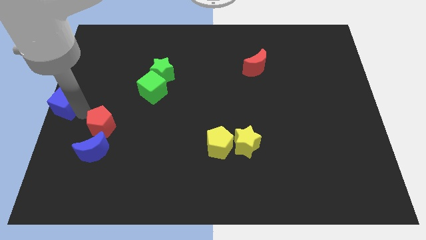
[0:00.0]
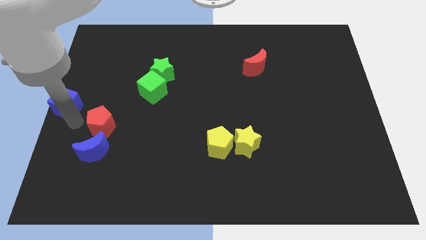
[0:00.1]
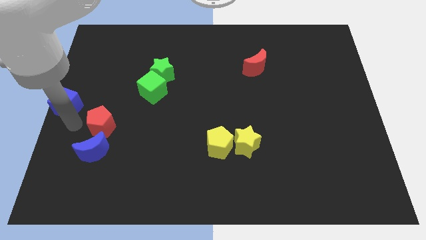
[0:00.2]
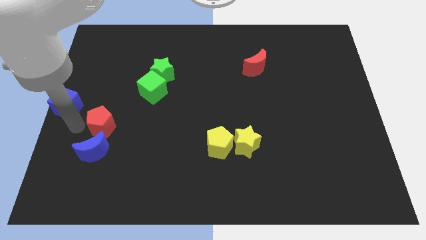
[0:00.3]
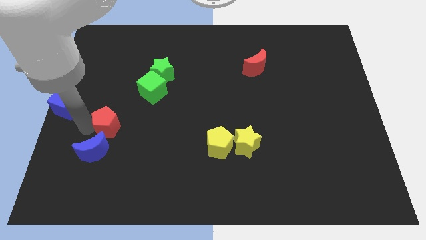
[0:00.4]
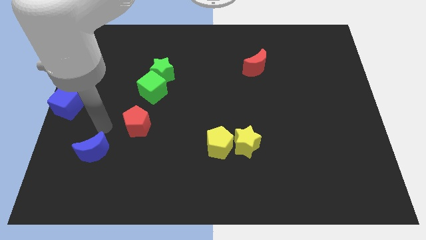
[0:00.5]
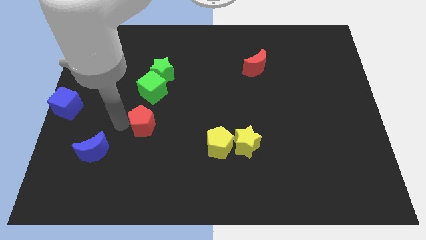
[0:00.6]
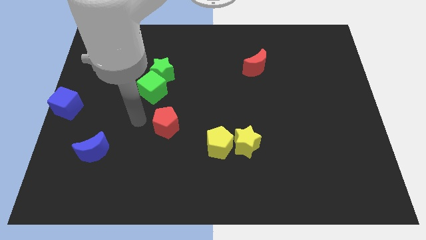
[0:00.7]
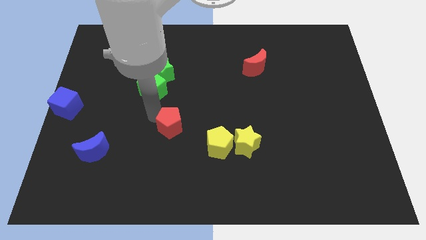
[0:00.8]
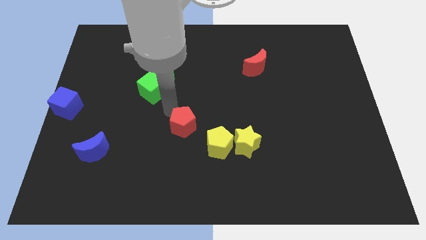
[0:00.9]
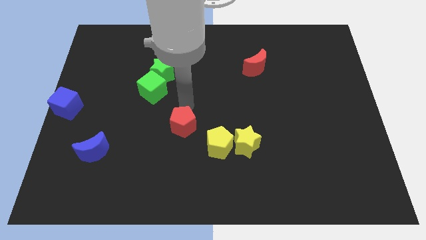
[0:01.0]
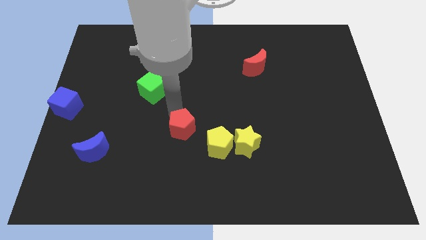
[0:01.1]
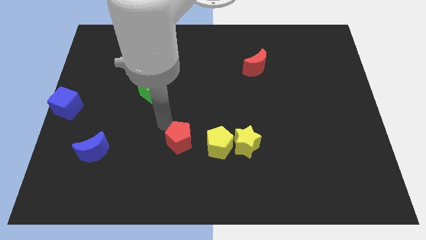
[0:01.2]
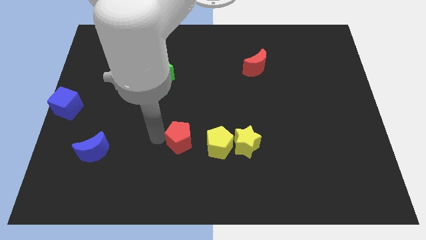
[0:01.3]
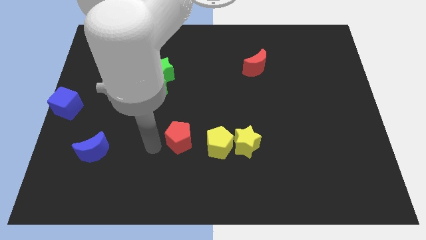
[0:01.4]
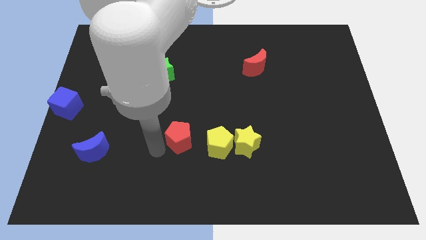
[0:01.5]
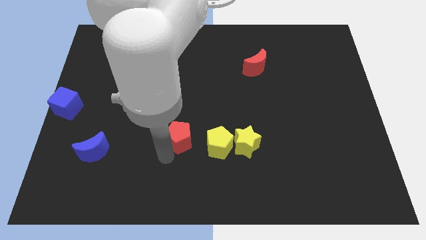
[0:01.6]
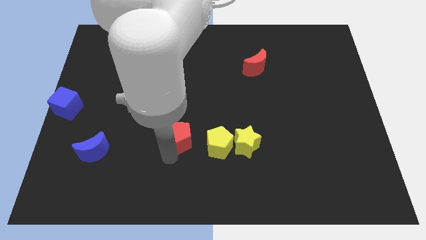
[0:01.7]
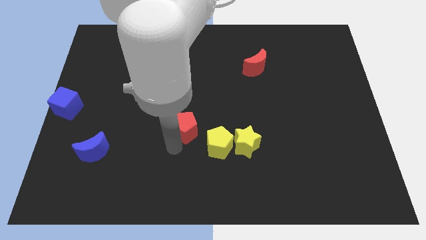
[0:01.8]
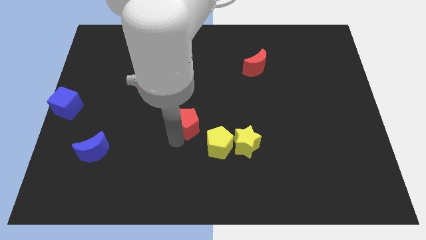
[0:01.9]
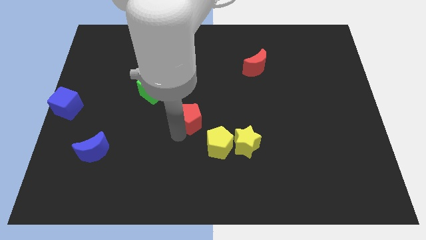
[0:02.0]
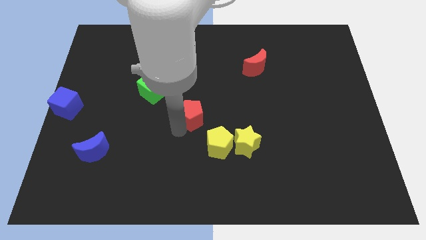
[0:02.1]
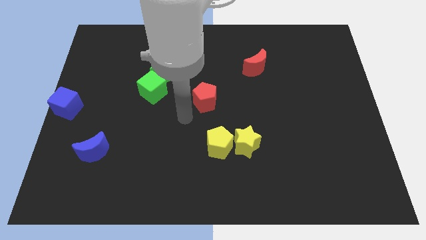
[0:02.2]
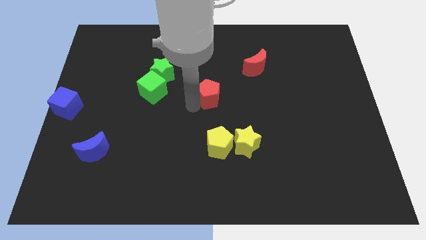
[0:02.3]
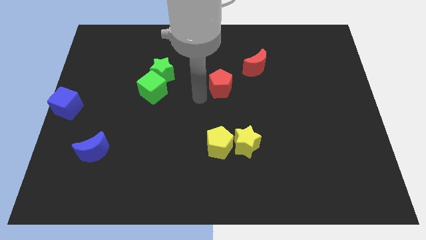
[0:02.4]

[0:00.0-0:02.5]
place the red pentagon to the right of the green cube

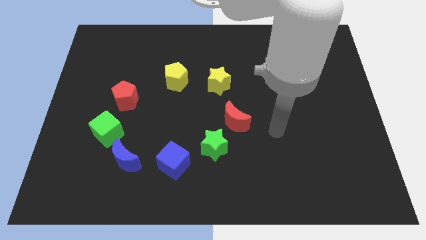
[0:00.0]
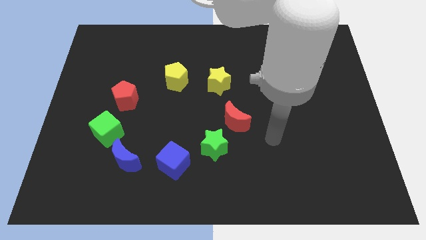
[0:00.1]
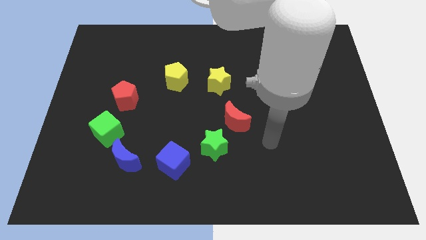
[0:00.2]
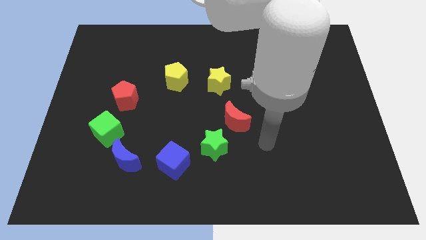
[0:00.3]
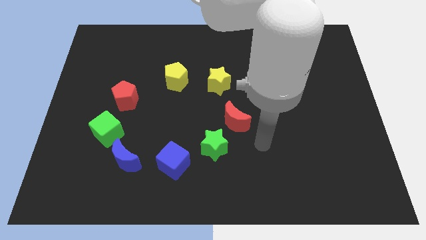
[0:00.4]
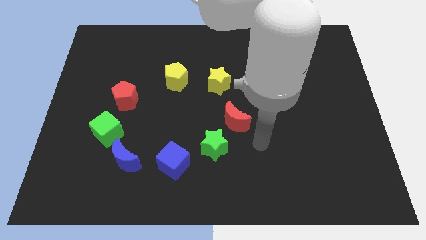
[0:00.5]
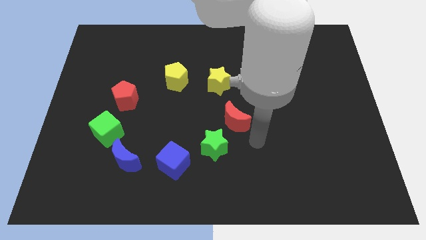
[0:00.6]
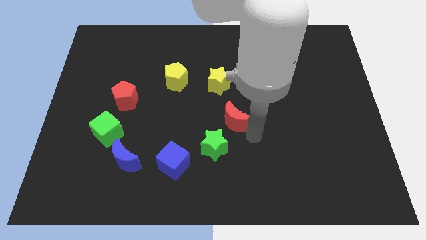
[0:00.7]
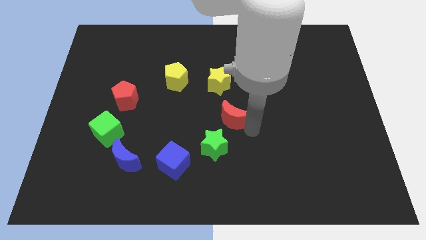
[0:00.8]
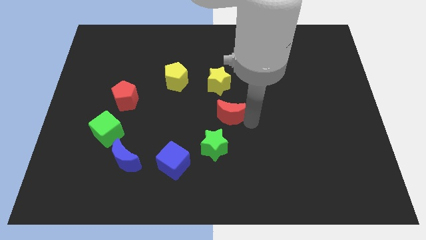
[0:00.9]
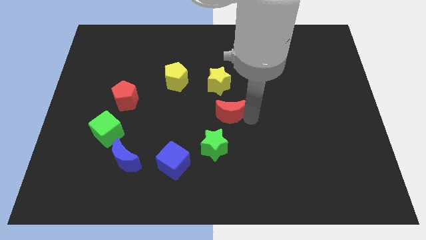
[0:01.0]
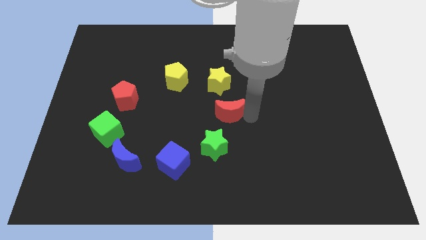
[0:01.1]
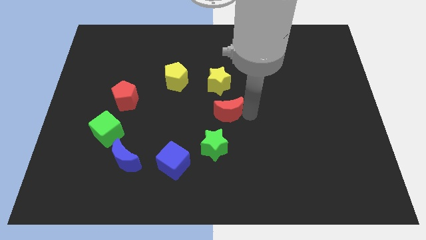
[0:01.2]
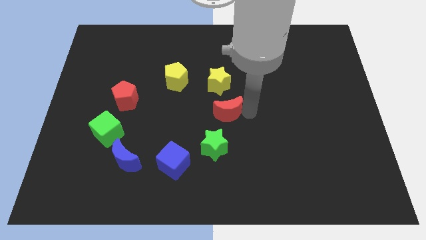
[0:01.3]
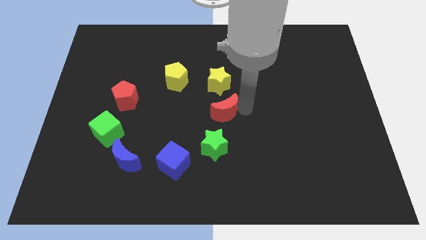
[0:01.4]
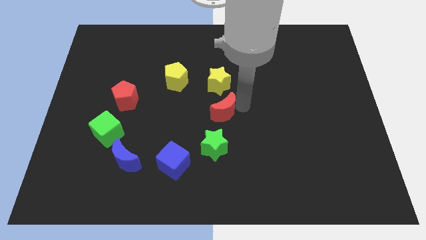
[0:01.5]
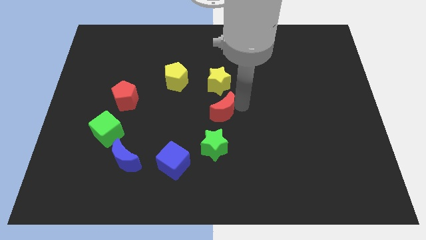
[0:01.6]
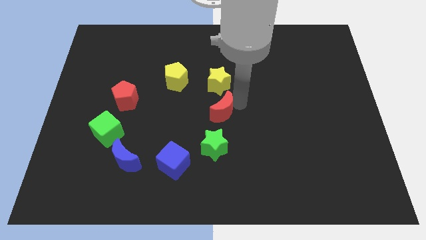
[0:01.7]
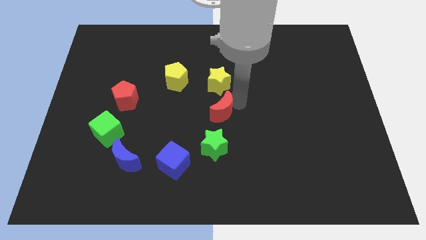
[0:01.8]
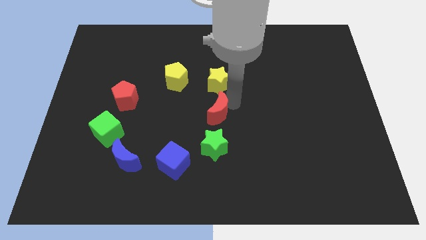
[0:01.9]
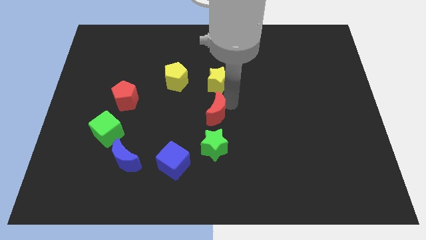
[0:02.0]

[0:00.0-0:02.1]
place red moon on top of green star

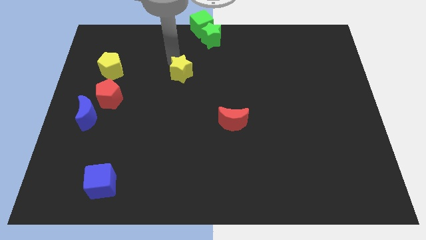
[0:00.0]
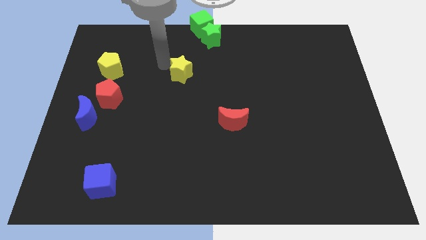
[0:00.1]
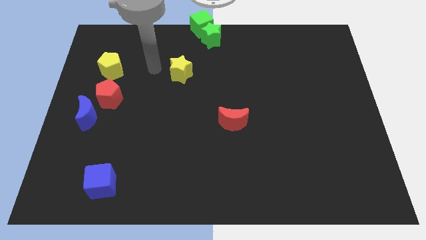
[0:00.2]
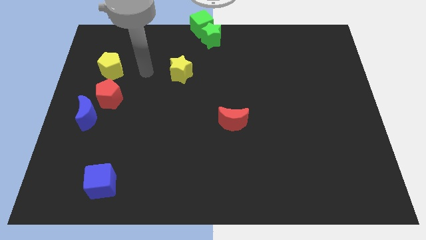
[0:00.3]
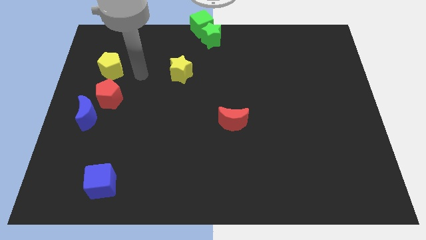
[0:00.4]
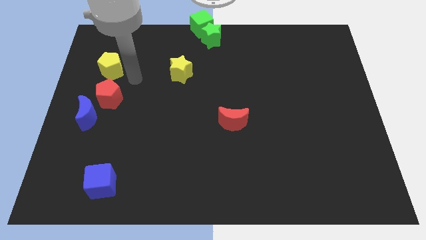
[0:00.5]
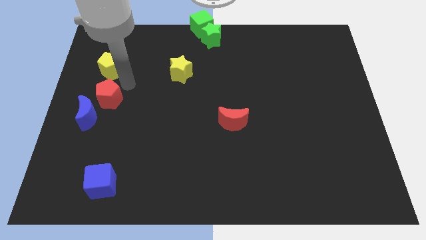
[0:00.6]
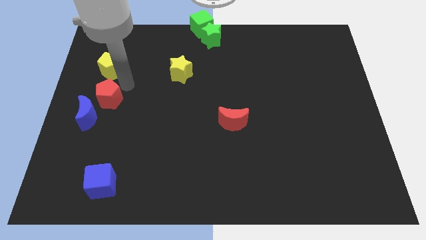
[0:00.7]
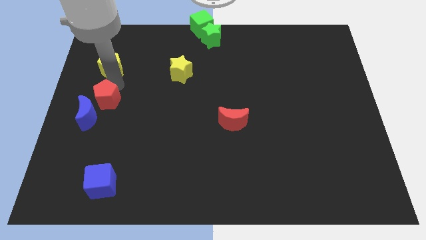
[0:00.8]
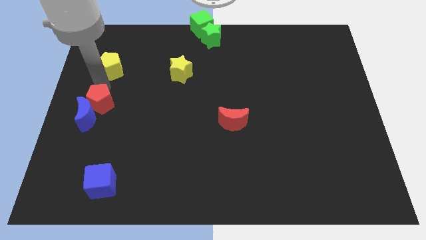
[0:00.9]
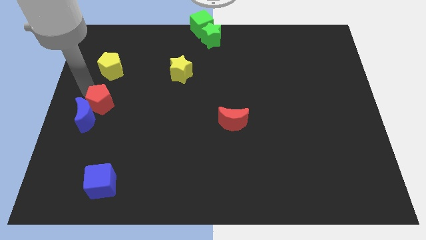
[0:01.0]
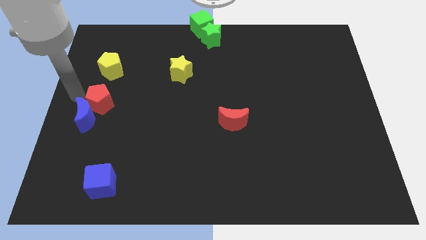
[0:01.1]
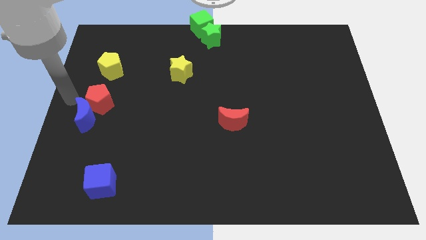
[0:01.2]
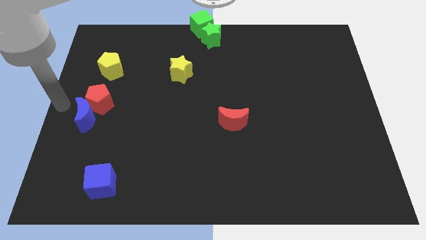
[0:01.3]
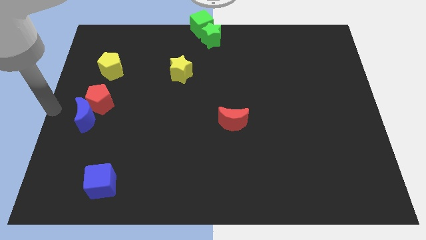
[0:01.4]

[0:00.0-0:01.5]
separate red pentagon and yellow pentagon

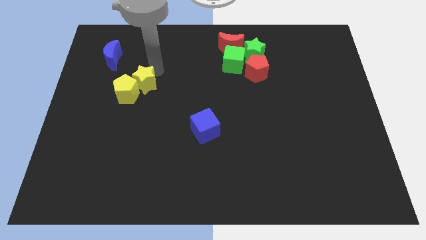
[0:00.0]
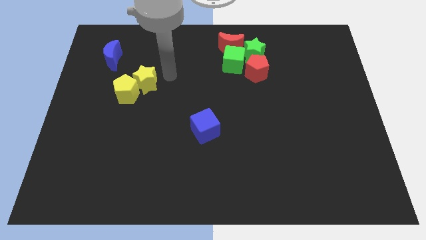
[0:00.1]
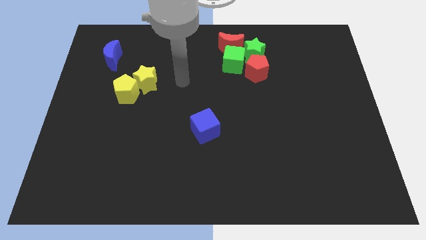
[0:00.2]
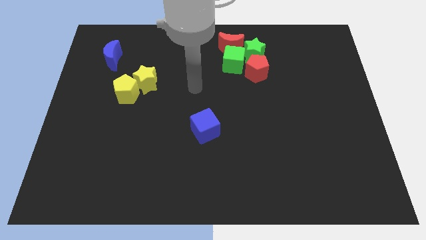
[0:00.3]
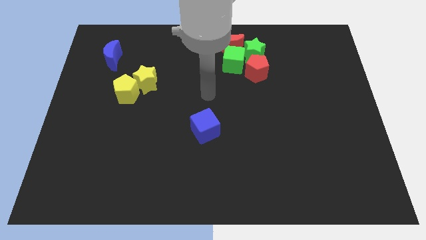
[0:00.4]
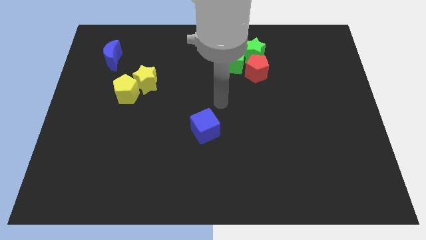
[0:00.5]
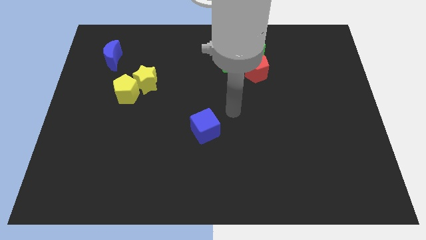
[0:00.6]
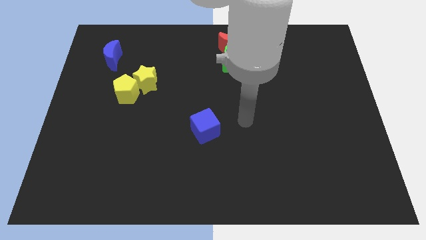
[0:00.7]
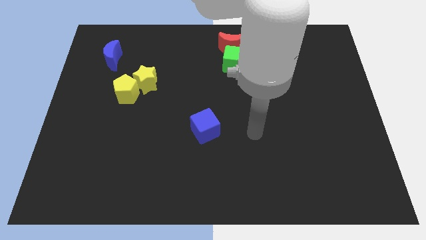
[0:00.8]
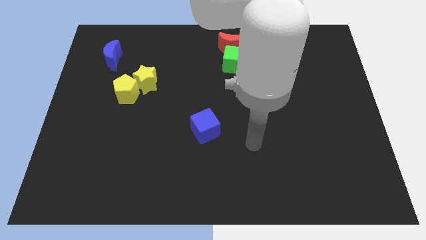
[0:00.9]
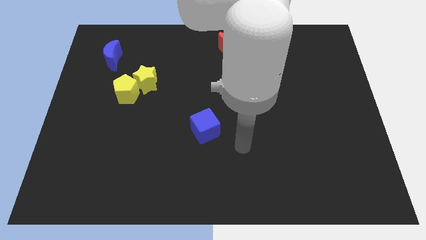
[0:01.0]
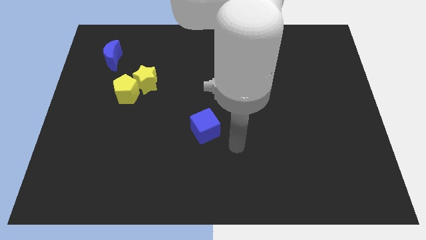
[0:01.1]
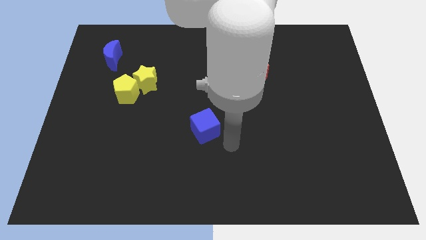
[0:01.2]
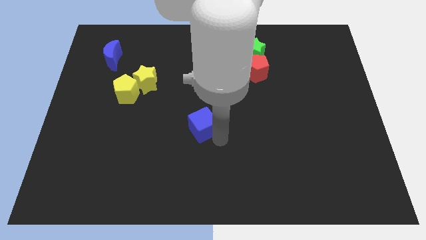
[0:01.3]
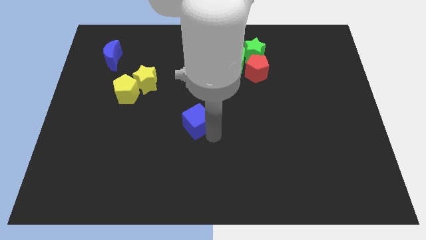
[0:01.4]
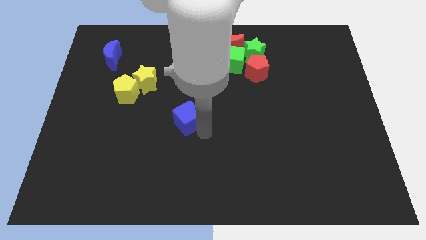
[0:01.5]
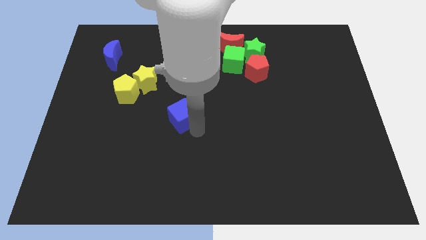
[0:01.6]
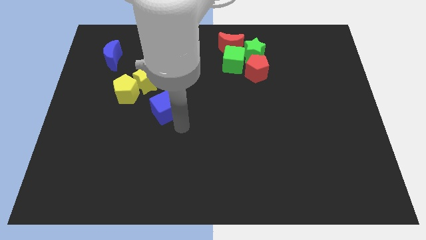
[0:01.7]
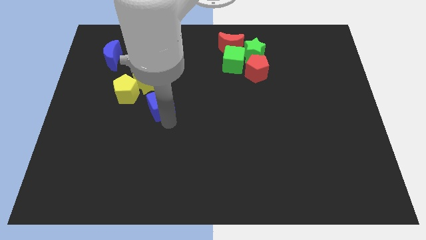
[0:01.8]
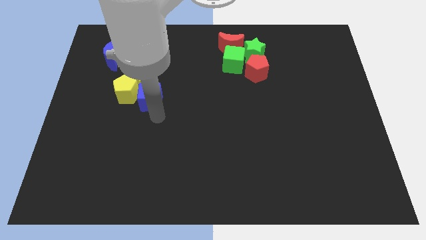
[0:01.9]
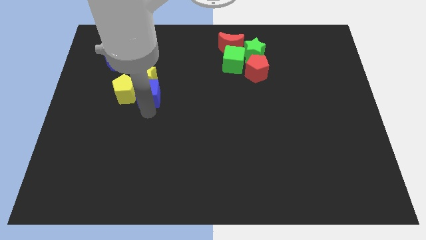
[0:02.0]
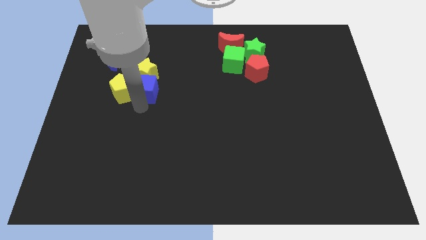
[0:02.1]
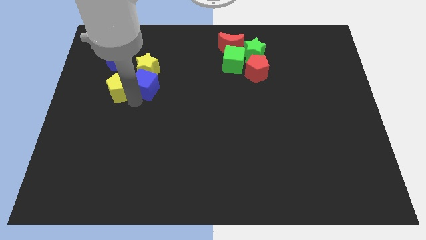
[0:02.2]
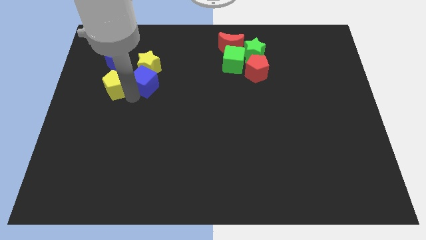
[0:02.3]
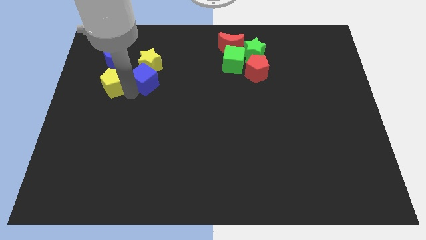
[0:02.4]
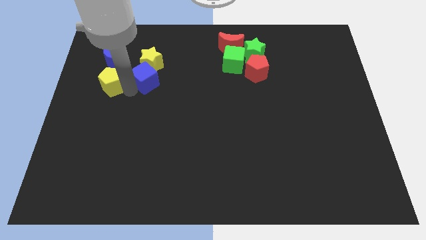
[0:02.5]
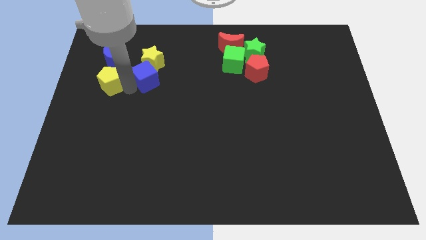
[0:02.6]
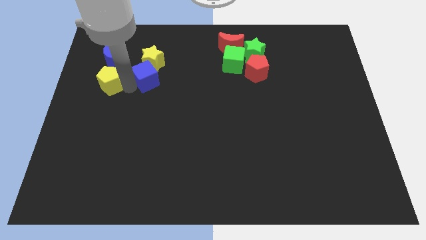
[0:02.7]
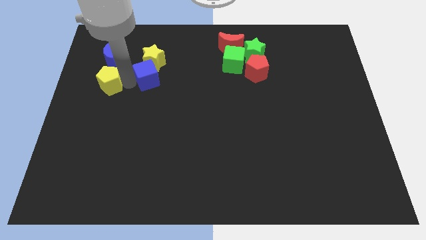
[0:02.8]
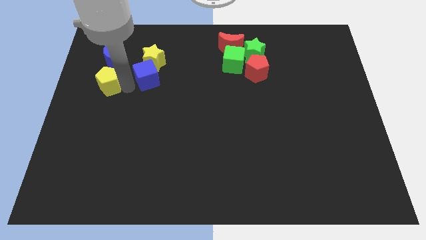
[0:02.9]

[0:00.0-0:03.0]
separate the yellow pentagon and star with a blue cube
